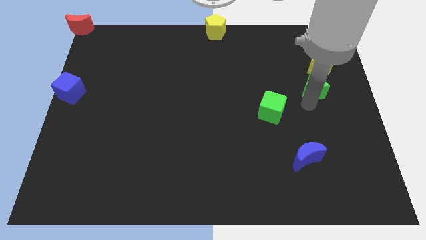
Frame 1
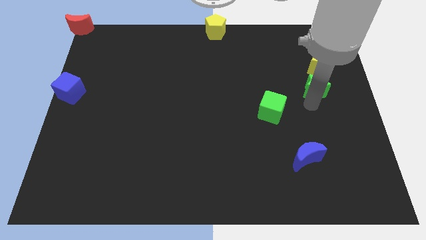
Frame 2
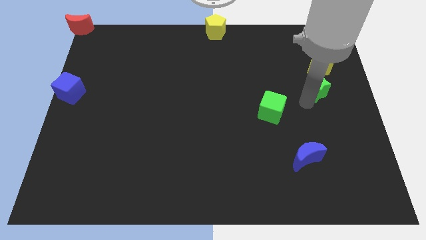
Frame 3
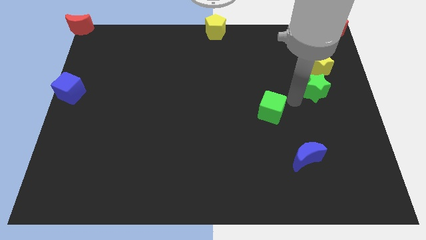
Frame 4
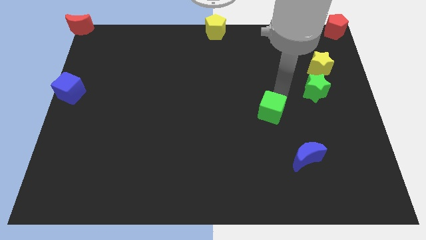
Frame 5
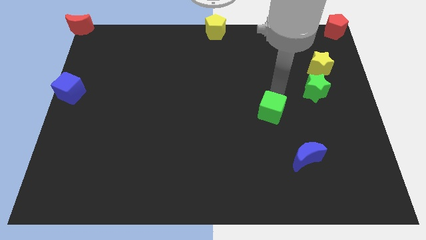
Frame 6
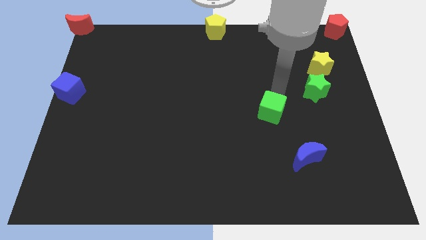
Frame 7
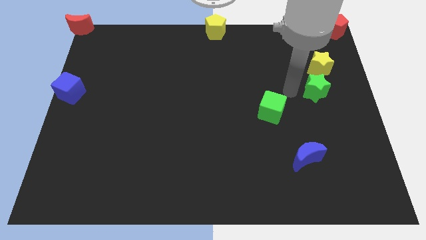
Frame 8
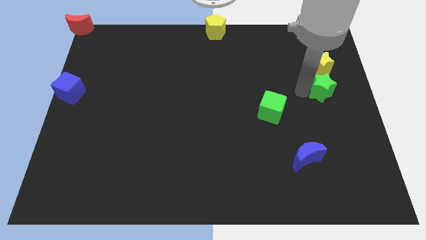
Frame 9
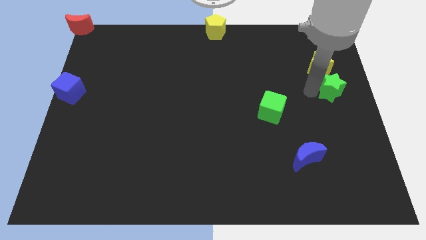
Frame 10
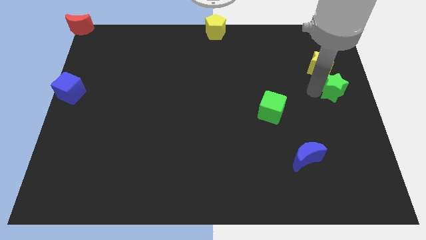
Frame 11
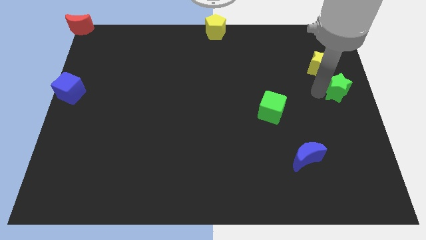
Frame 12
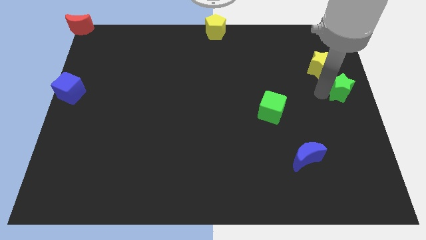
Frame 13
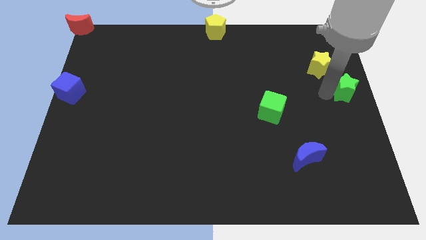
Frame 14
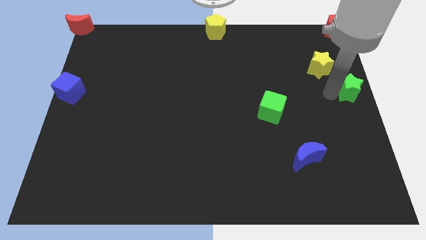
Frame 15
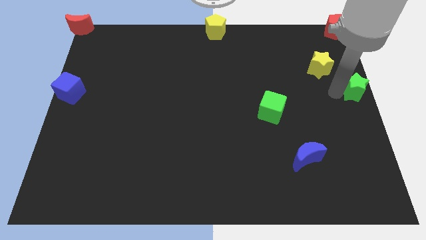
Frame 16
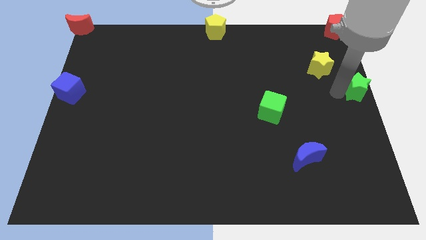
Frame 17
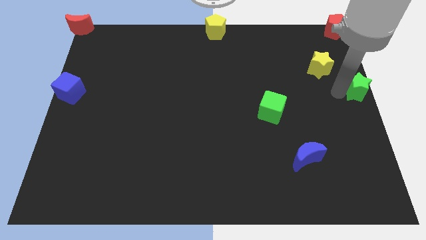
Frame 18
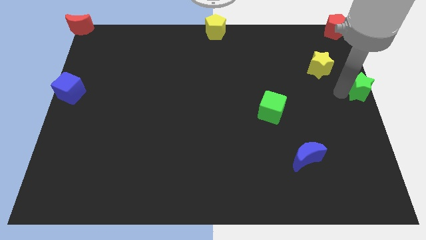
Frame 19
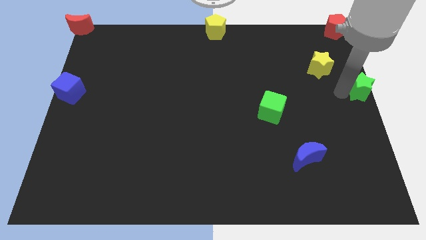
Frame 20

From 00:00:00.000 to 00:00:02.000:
push the green star to the right center of the board

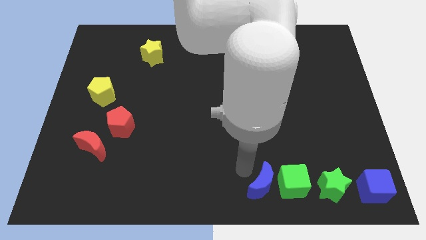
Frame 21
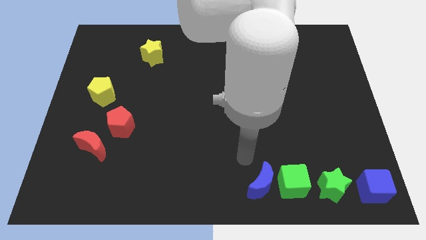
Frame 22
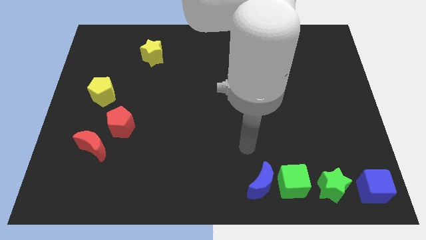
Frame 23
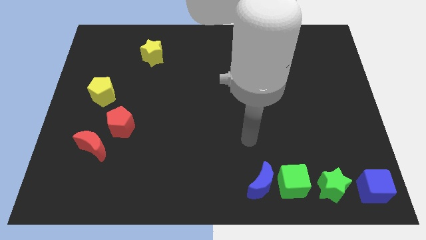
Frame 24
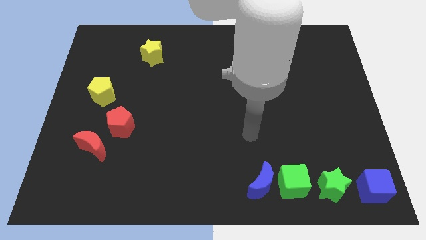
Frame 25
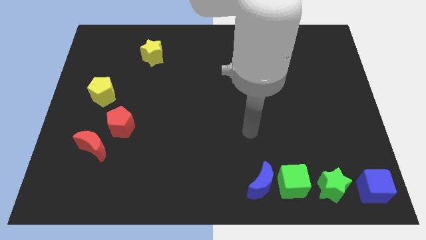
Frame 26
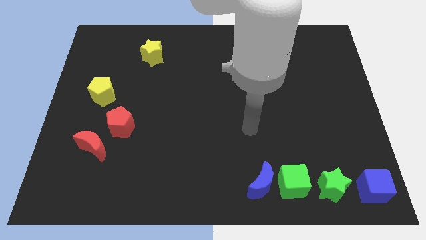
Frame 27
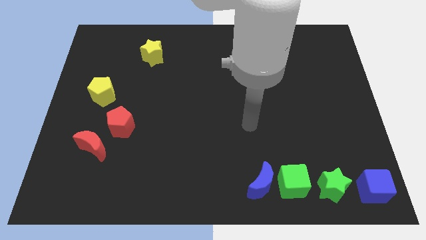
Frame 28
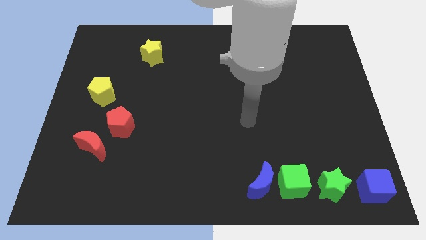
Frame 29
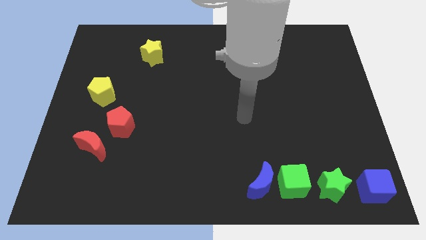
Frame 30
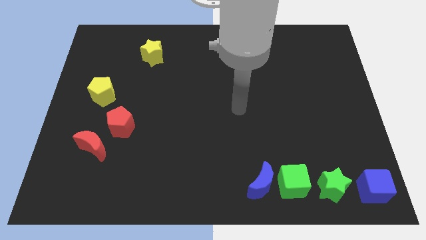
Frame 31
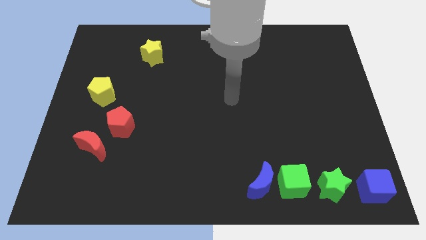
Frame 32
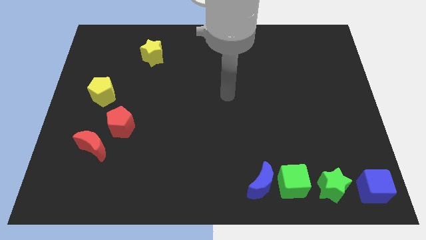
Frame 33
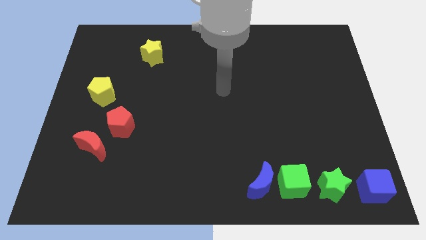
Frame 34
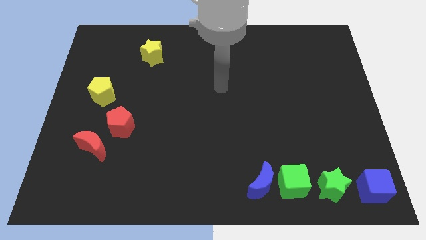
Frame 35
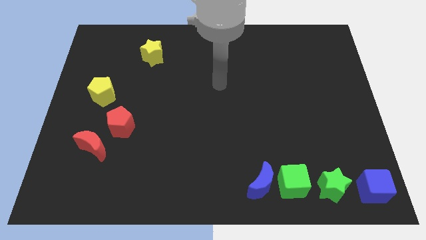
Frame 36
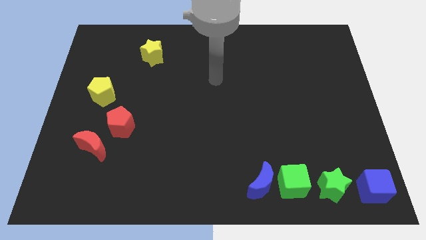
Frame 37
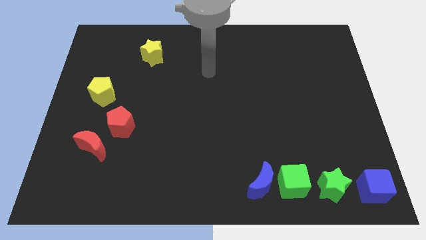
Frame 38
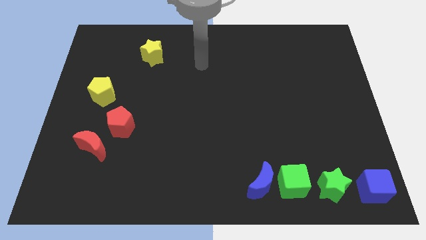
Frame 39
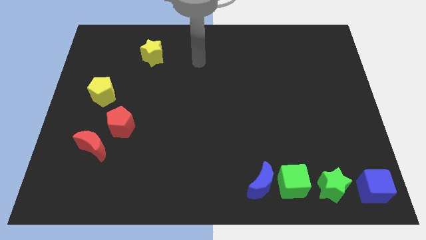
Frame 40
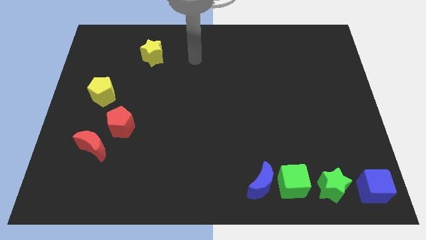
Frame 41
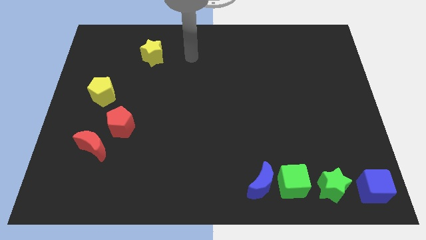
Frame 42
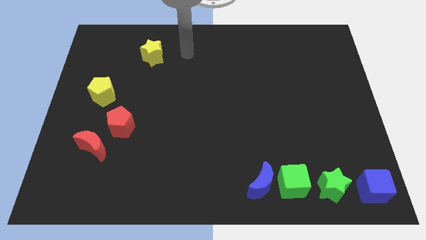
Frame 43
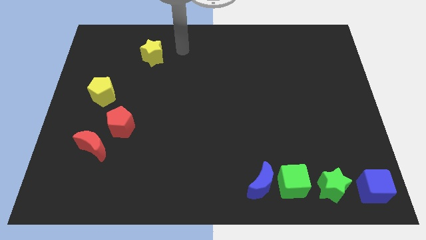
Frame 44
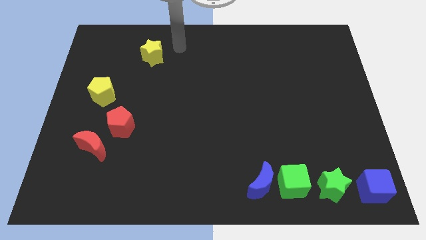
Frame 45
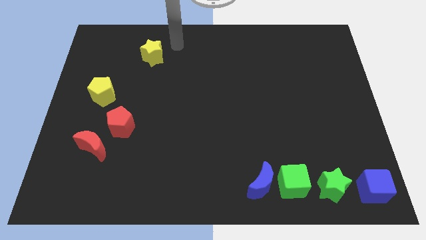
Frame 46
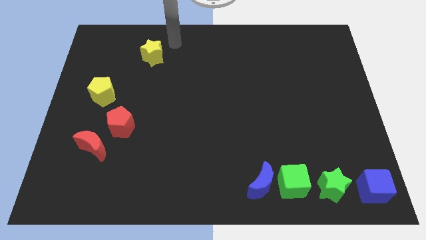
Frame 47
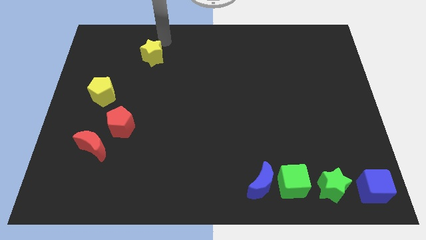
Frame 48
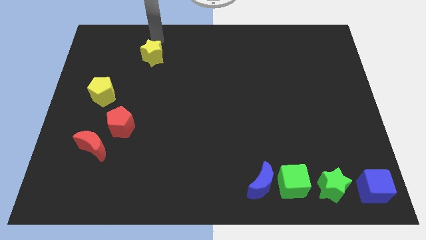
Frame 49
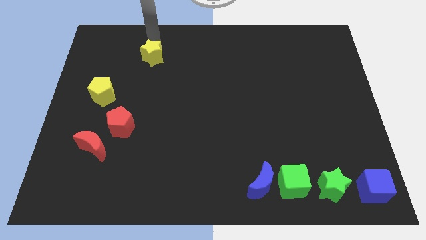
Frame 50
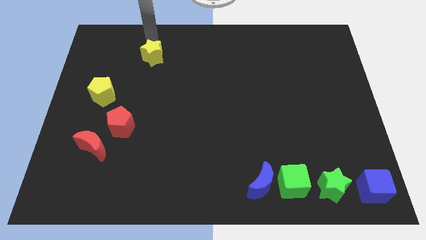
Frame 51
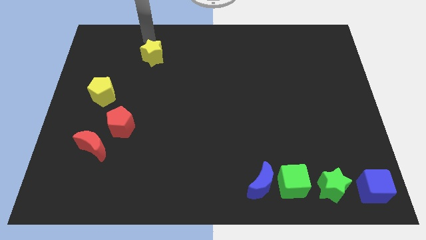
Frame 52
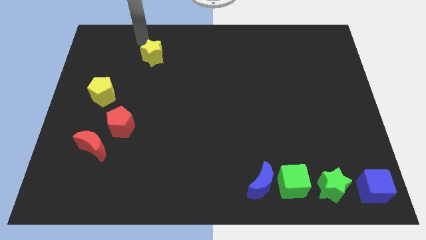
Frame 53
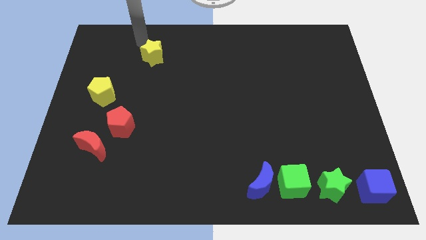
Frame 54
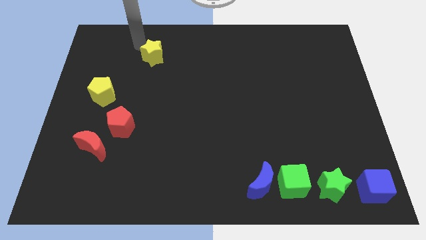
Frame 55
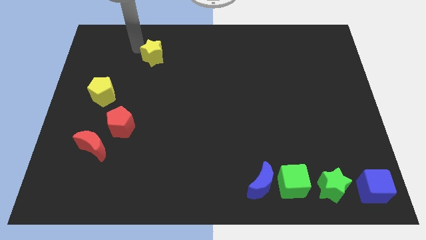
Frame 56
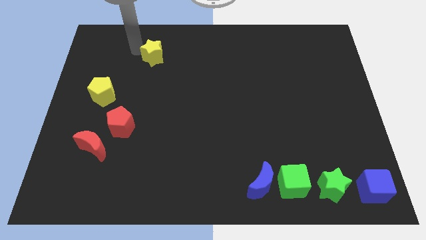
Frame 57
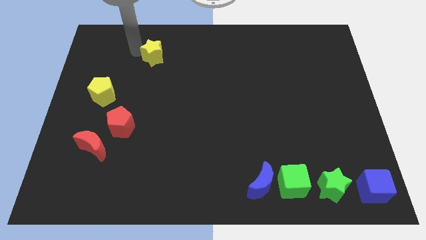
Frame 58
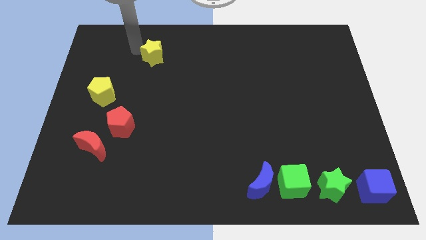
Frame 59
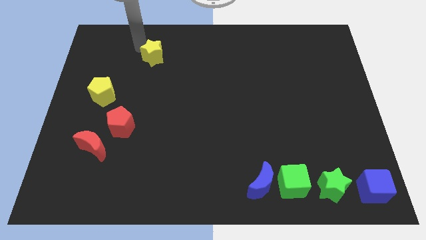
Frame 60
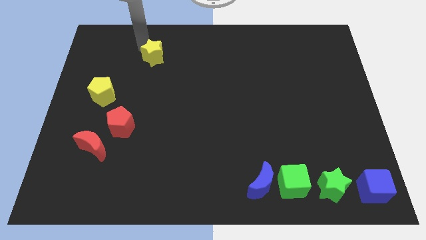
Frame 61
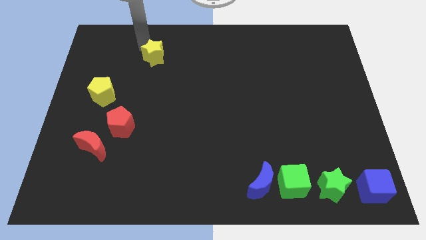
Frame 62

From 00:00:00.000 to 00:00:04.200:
move arm to the top of yellow star

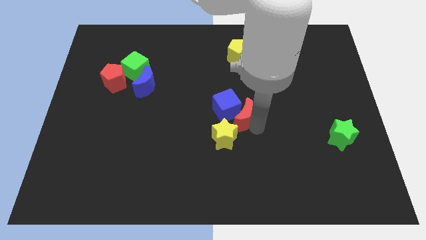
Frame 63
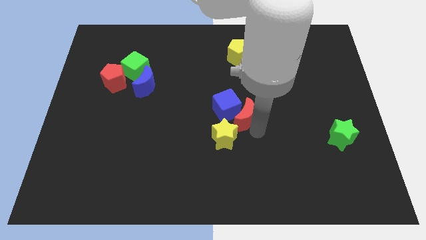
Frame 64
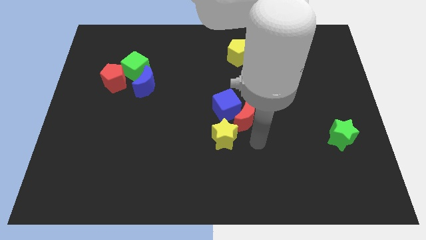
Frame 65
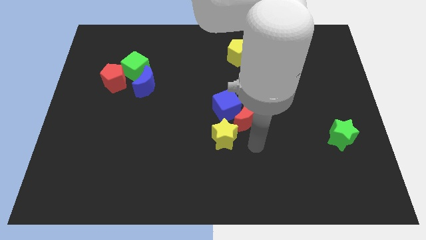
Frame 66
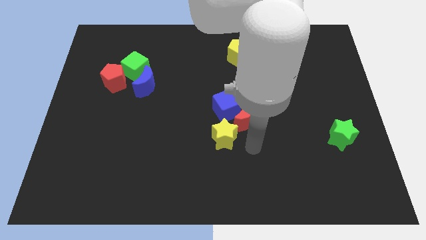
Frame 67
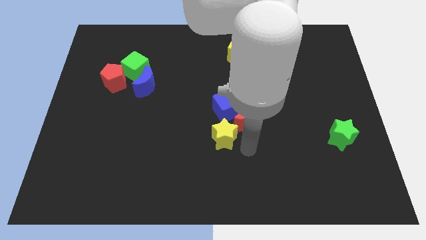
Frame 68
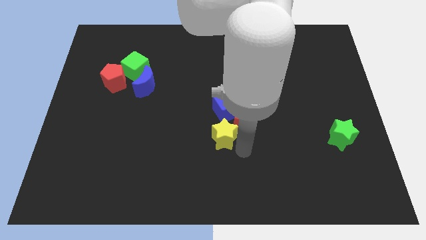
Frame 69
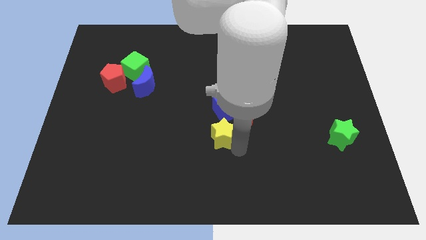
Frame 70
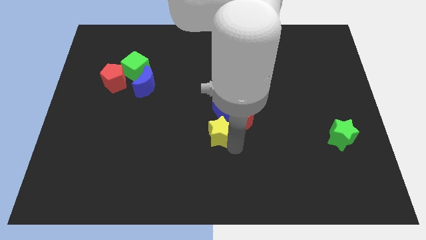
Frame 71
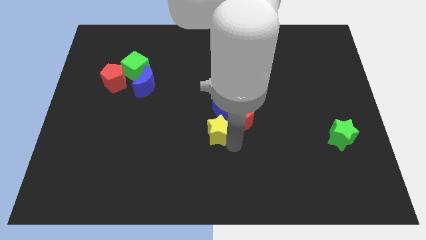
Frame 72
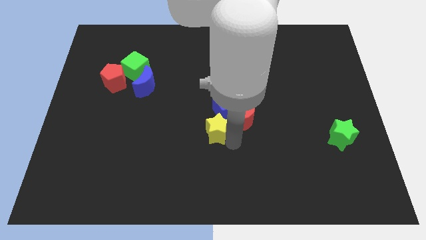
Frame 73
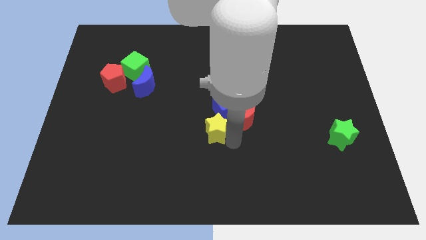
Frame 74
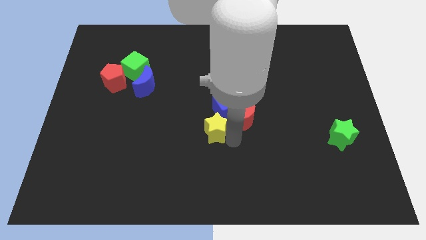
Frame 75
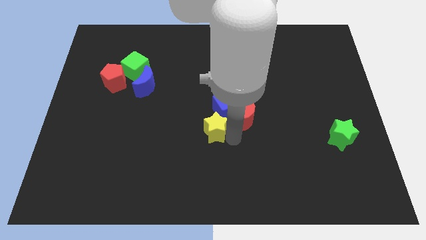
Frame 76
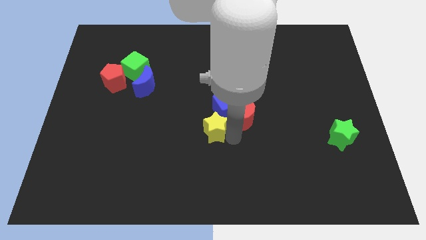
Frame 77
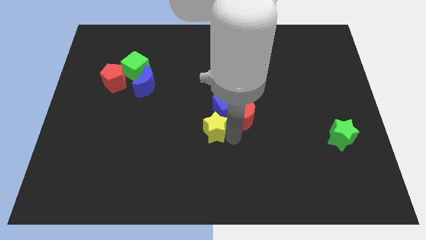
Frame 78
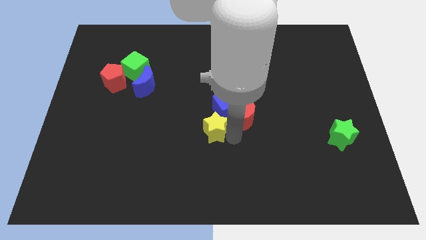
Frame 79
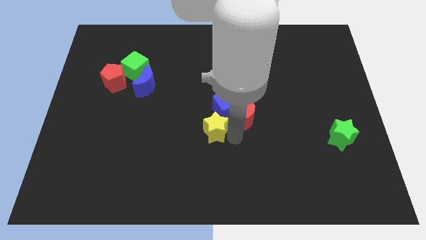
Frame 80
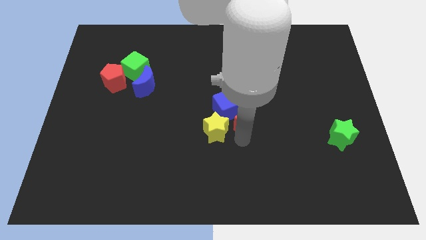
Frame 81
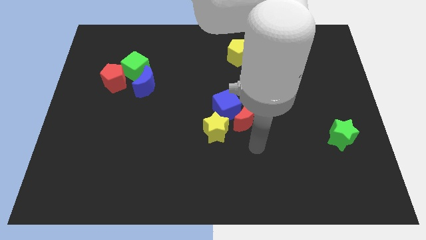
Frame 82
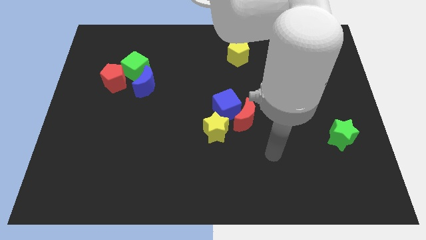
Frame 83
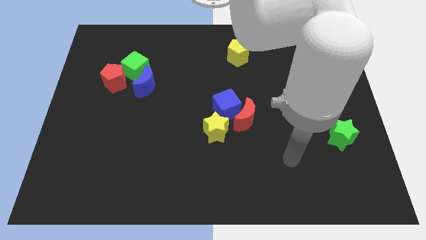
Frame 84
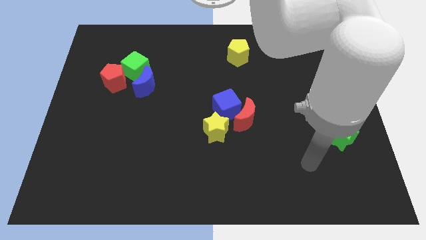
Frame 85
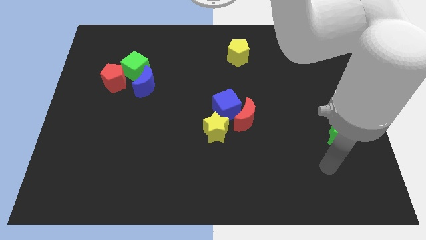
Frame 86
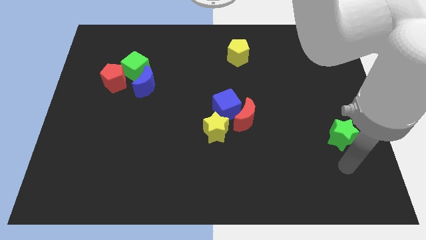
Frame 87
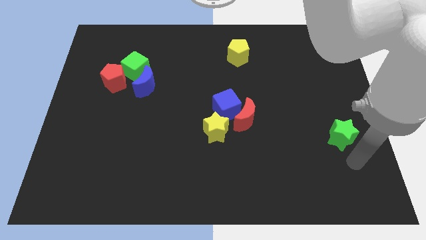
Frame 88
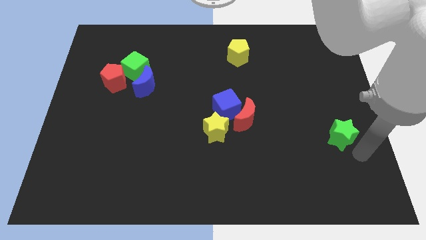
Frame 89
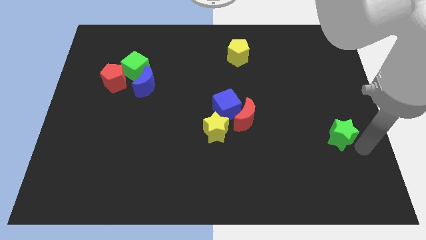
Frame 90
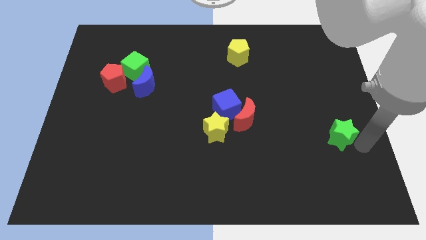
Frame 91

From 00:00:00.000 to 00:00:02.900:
place yellow star to the bottom left of blue cube
